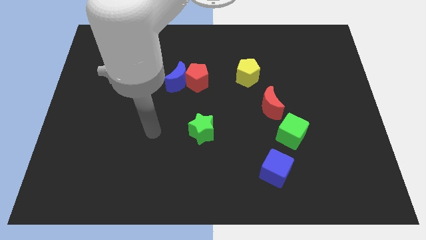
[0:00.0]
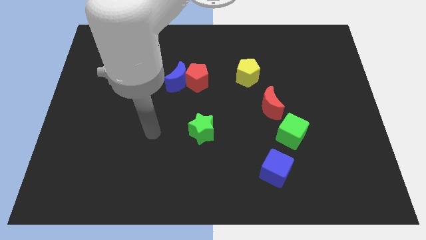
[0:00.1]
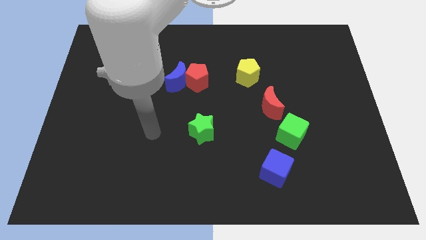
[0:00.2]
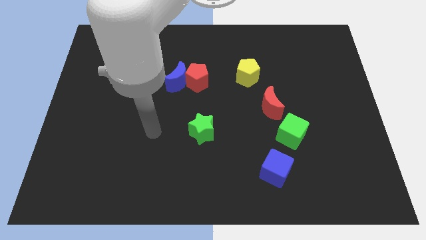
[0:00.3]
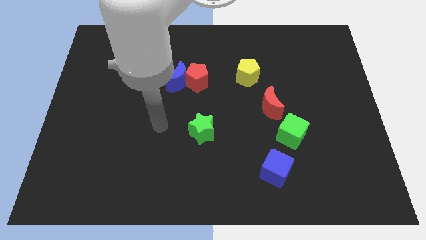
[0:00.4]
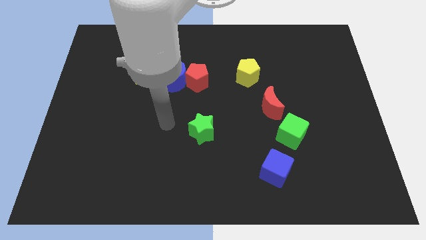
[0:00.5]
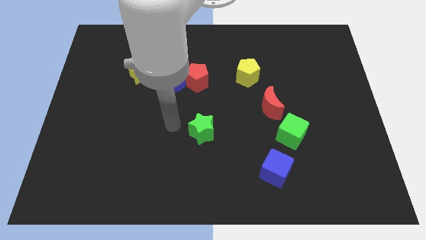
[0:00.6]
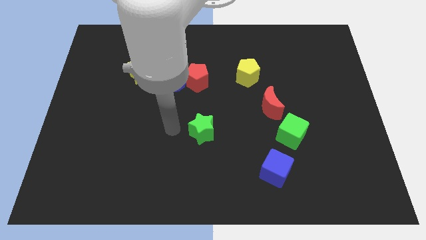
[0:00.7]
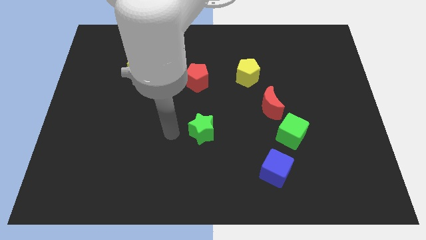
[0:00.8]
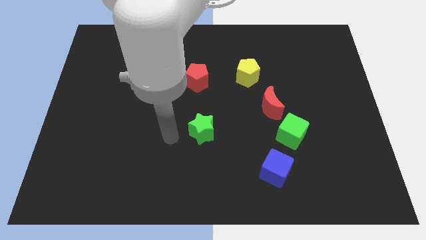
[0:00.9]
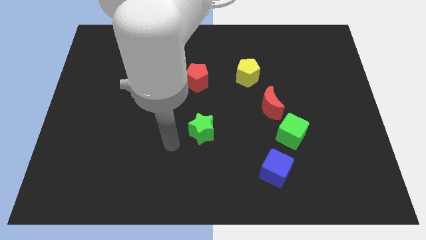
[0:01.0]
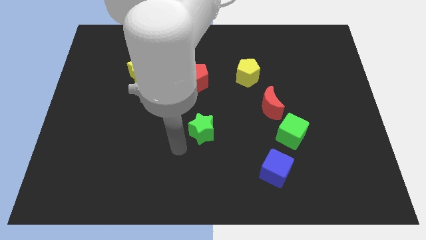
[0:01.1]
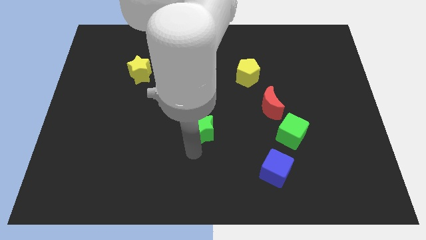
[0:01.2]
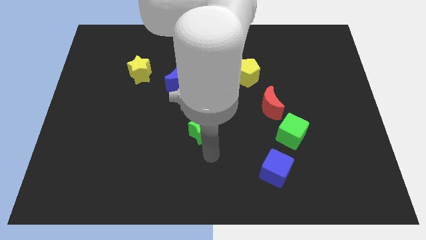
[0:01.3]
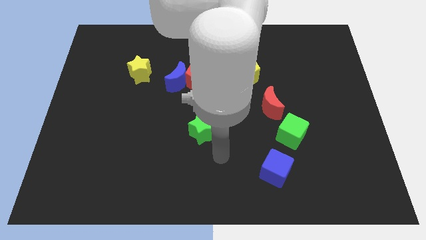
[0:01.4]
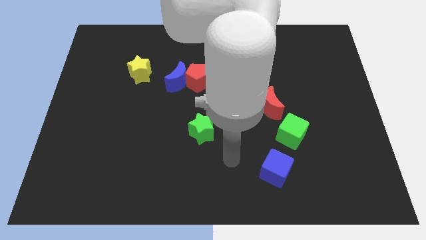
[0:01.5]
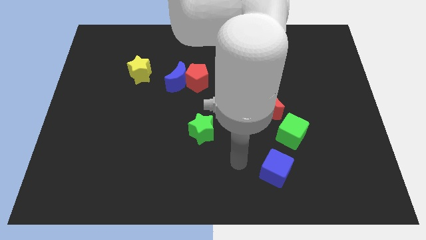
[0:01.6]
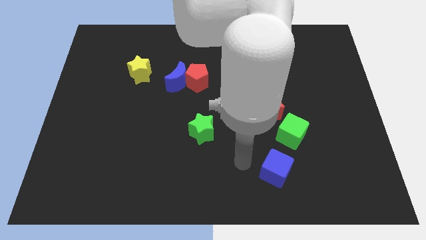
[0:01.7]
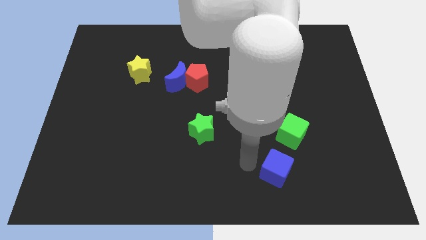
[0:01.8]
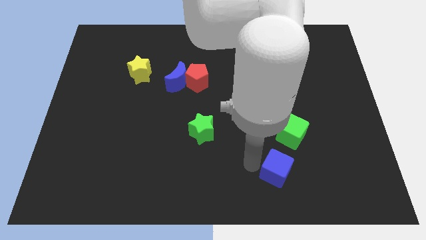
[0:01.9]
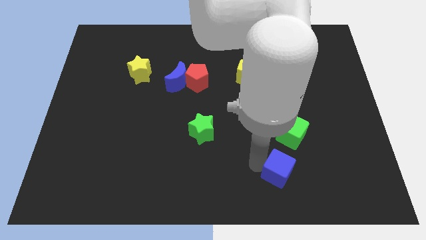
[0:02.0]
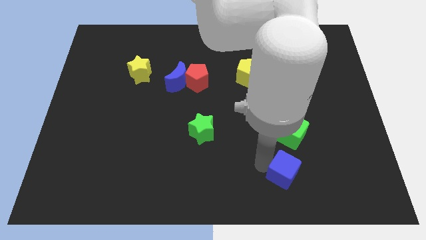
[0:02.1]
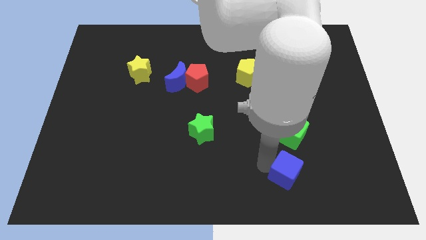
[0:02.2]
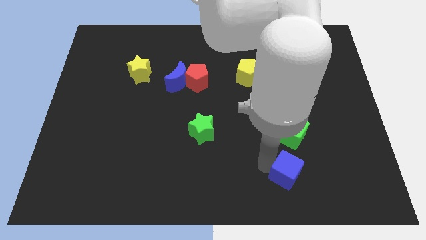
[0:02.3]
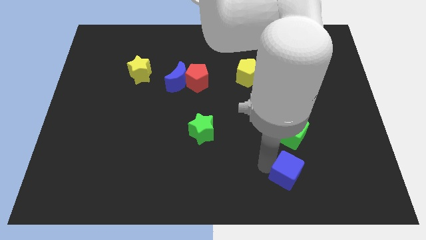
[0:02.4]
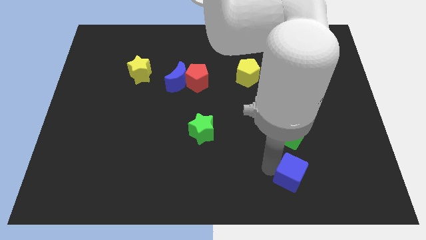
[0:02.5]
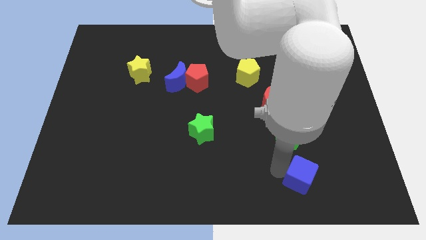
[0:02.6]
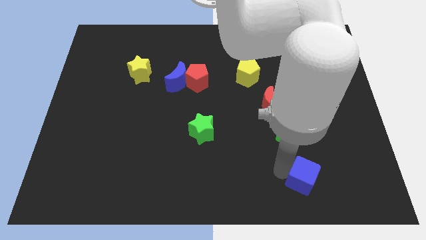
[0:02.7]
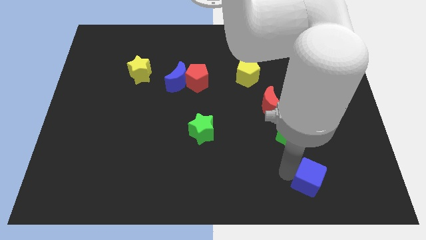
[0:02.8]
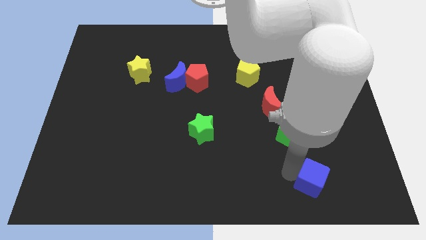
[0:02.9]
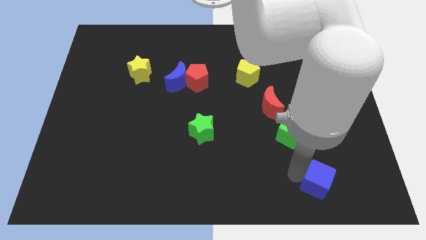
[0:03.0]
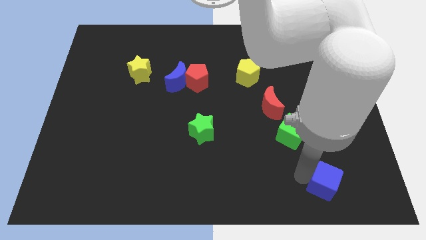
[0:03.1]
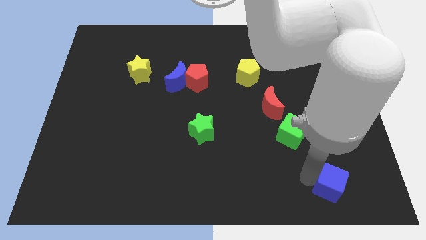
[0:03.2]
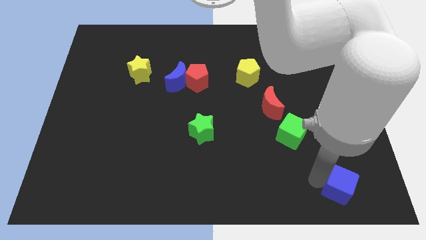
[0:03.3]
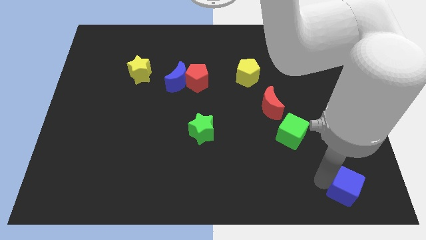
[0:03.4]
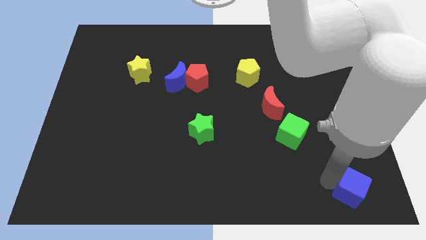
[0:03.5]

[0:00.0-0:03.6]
push the blue cube to the right

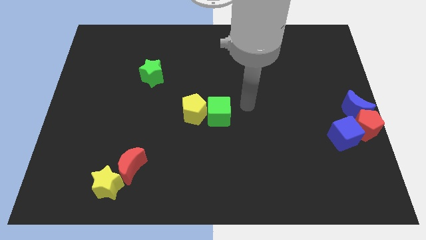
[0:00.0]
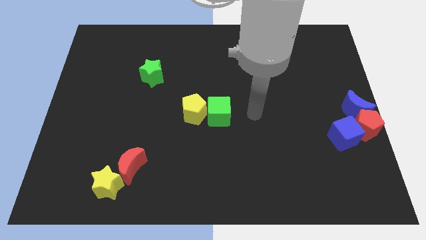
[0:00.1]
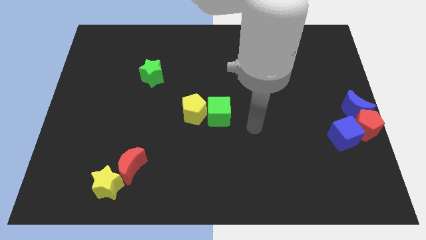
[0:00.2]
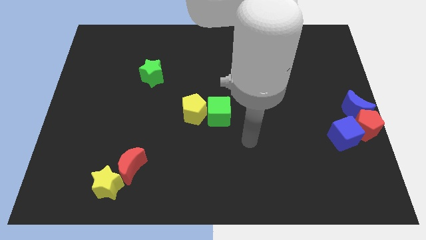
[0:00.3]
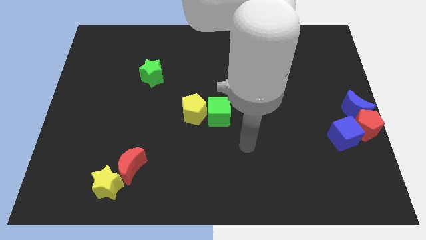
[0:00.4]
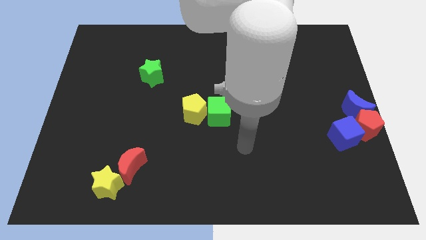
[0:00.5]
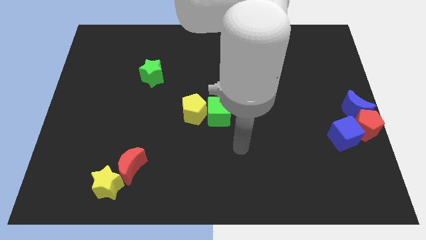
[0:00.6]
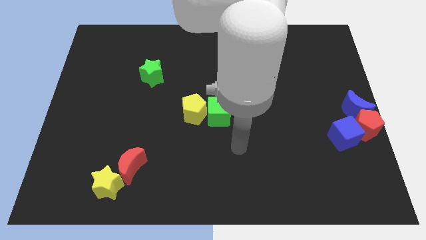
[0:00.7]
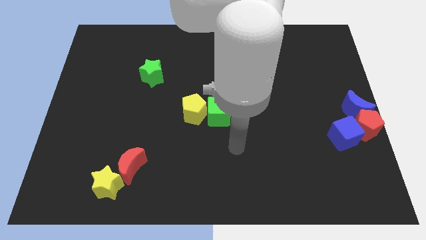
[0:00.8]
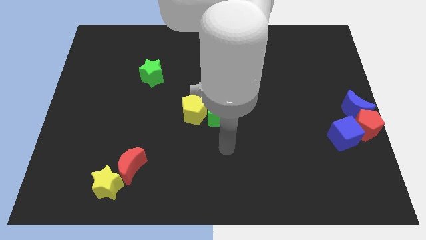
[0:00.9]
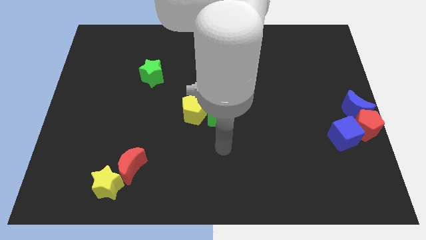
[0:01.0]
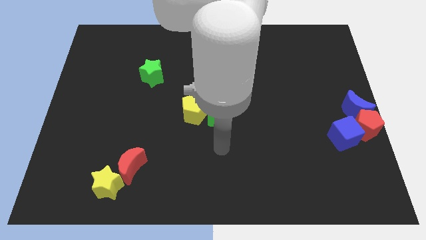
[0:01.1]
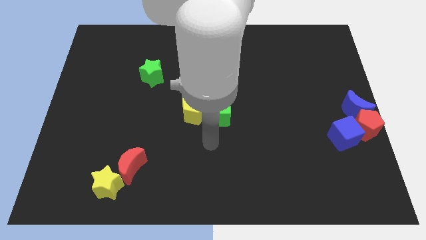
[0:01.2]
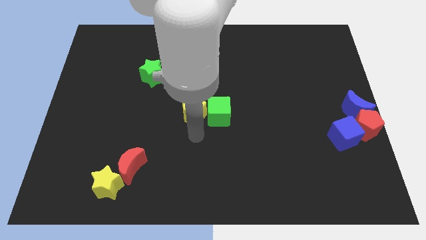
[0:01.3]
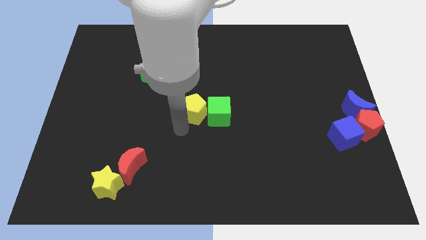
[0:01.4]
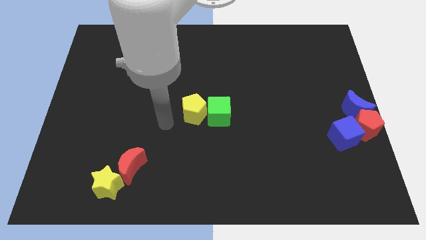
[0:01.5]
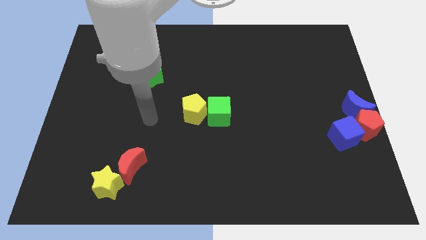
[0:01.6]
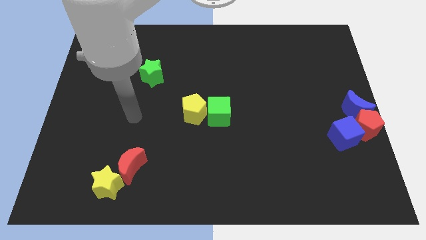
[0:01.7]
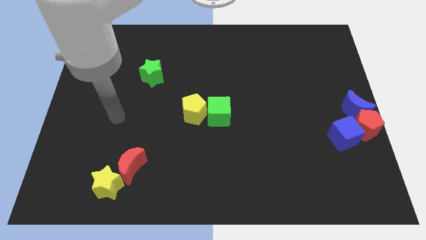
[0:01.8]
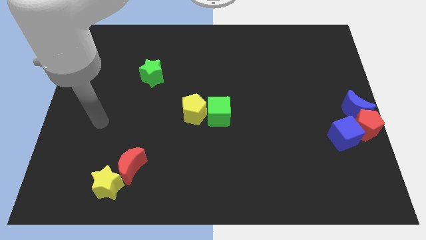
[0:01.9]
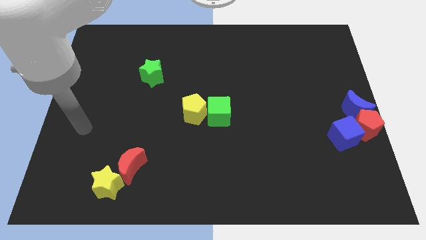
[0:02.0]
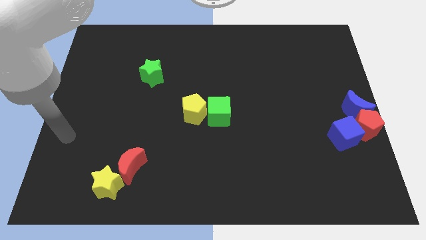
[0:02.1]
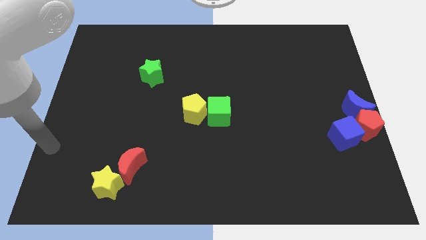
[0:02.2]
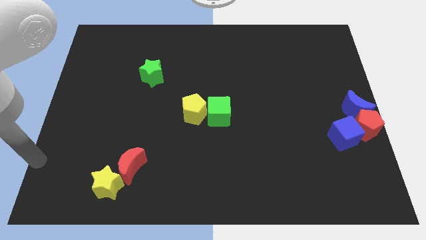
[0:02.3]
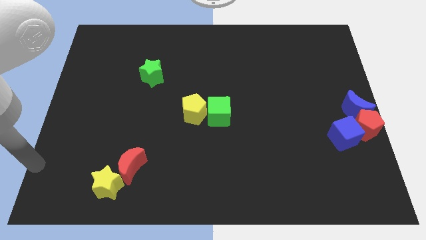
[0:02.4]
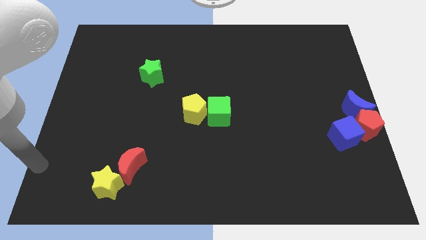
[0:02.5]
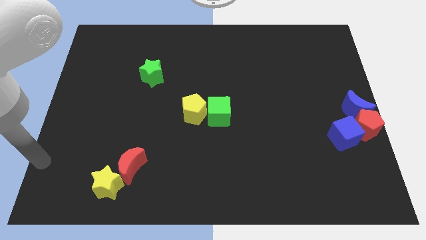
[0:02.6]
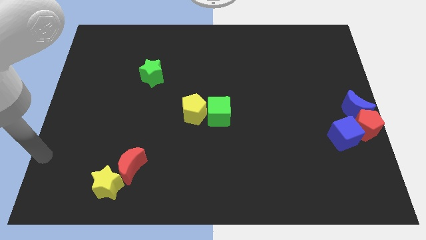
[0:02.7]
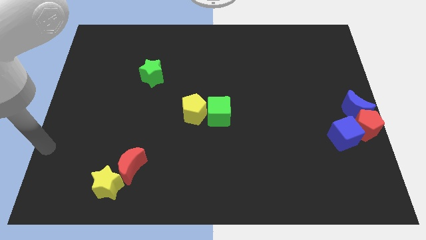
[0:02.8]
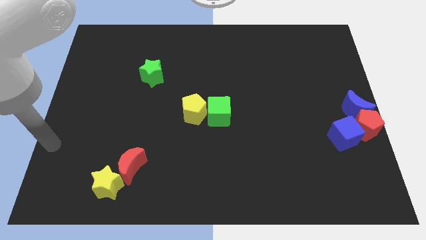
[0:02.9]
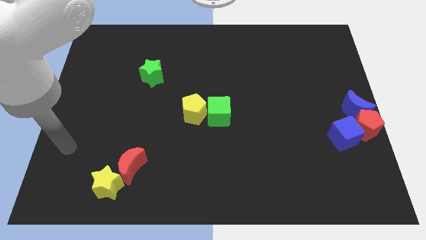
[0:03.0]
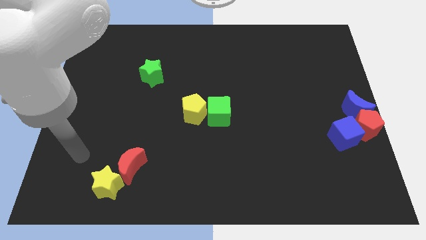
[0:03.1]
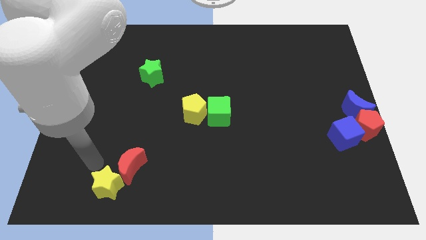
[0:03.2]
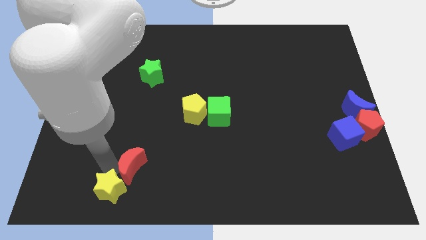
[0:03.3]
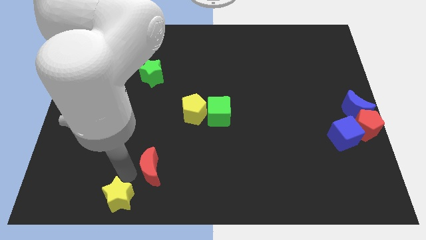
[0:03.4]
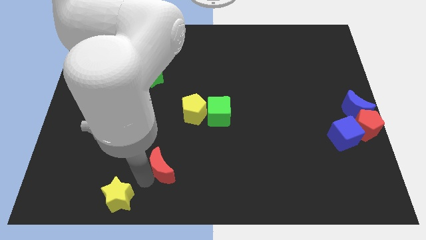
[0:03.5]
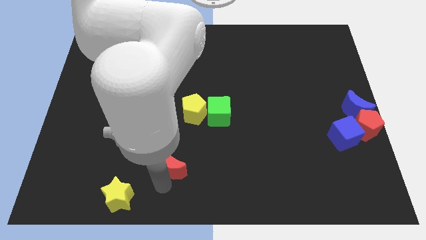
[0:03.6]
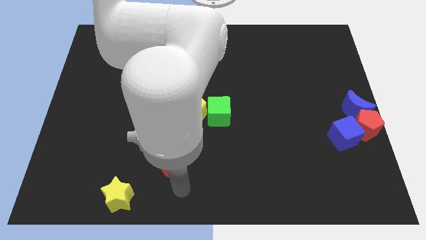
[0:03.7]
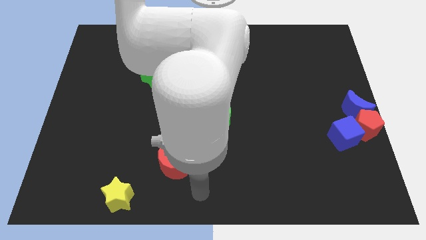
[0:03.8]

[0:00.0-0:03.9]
separate the yellow star and the red moon

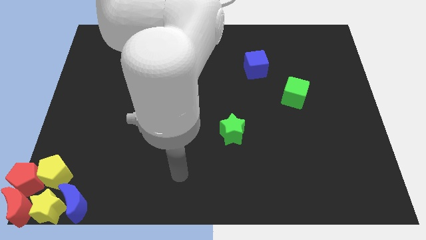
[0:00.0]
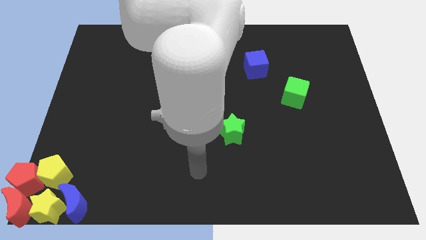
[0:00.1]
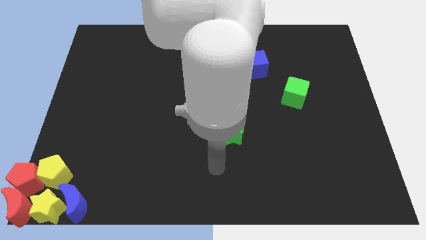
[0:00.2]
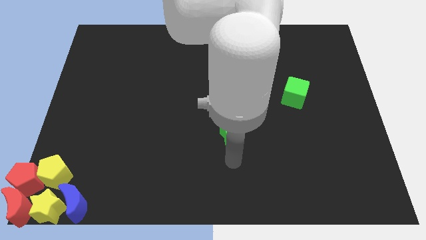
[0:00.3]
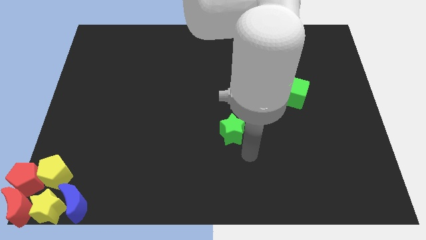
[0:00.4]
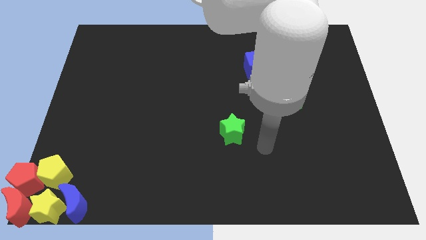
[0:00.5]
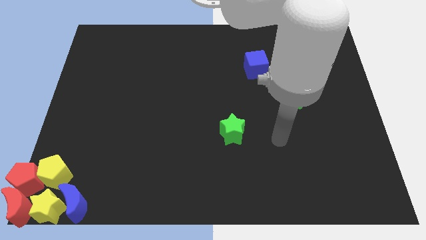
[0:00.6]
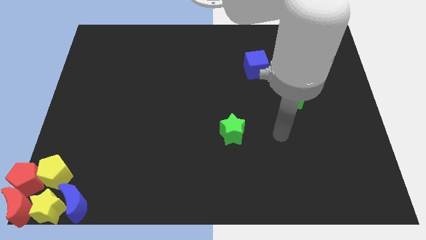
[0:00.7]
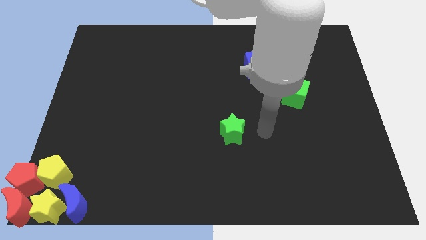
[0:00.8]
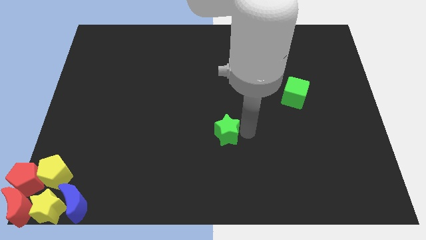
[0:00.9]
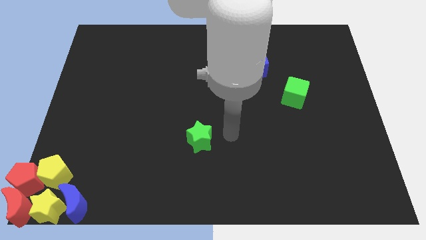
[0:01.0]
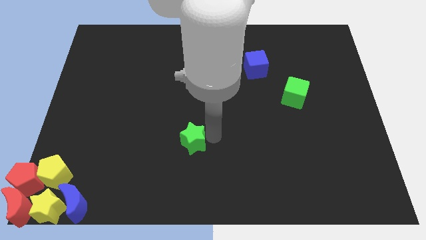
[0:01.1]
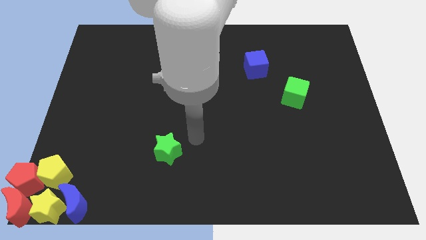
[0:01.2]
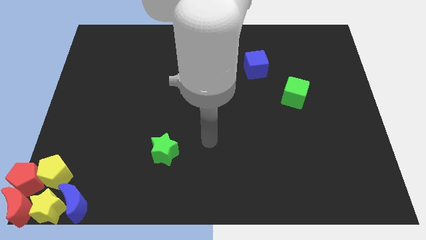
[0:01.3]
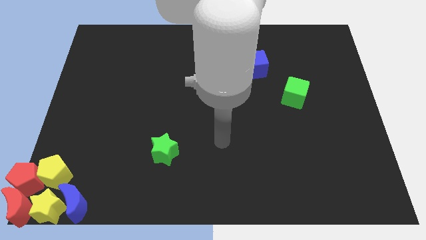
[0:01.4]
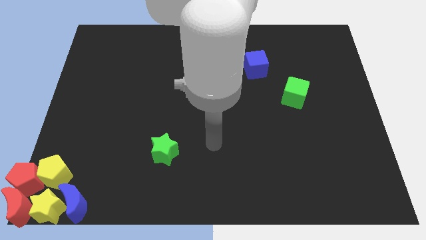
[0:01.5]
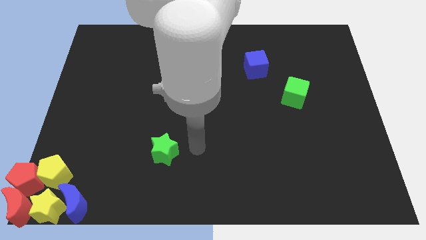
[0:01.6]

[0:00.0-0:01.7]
move the green star to the left side of the board
